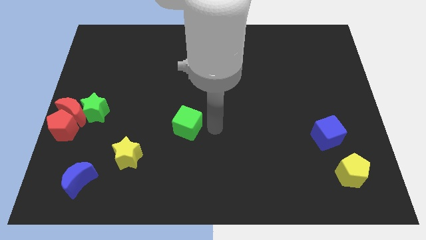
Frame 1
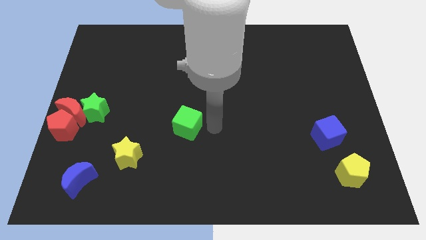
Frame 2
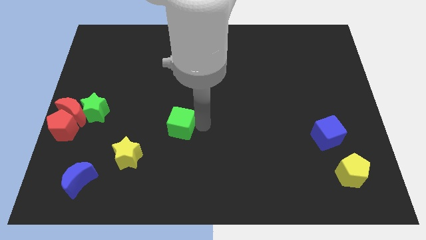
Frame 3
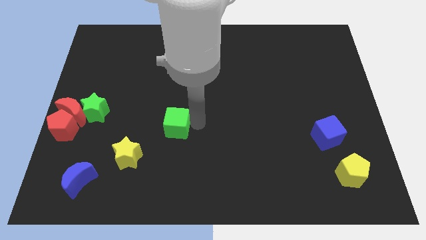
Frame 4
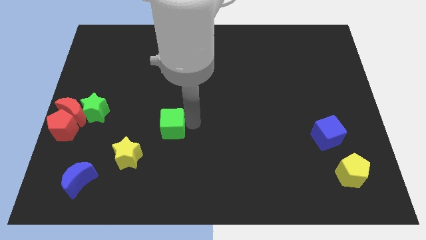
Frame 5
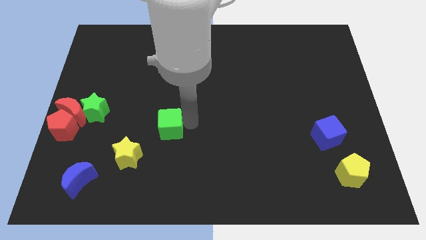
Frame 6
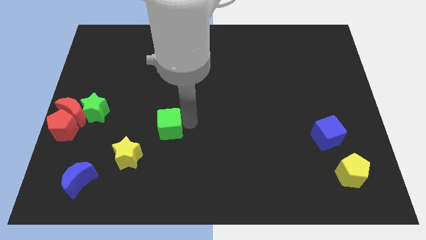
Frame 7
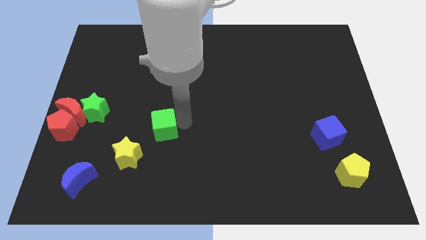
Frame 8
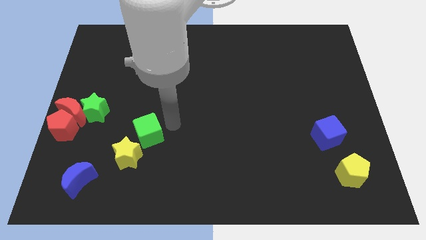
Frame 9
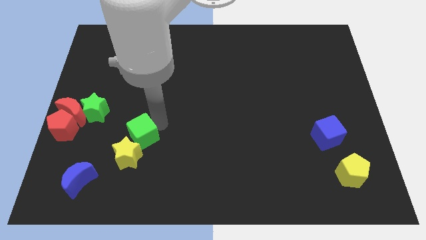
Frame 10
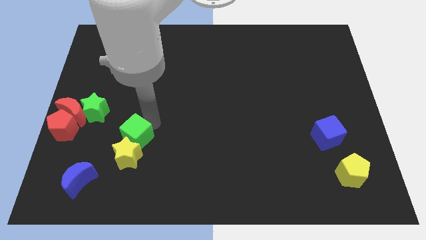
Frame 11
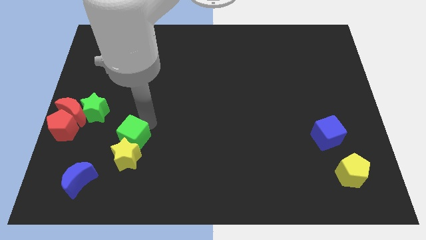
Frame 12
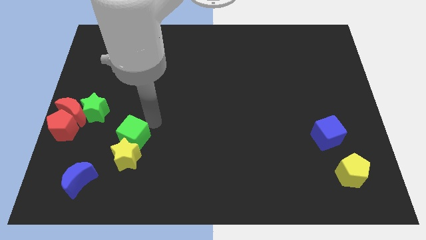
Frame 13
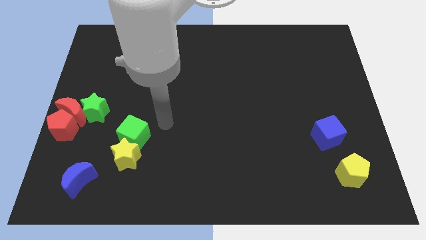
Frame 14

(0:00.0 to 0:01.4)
move green cube into yellow star

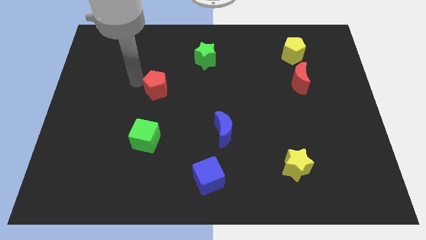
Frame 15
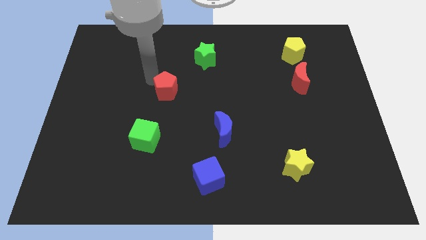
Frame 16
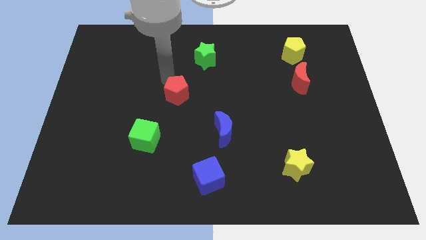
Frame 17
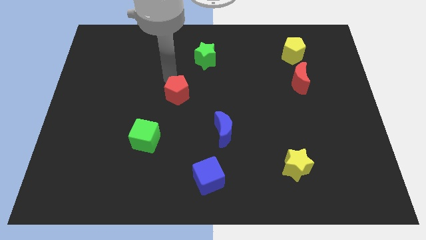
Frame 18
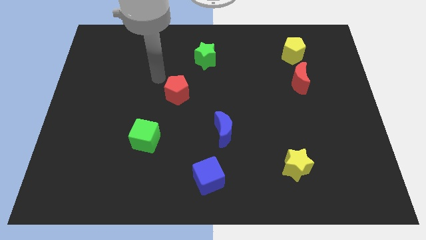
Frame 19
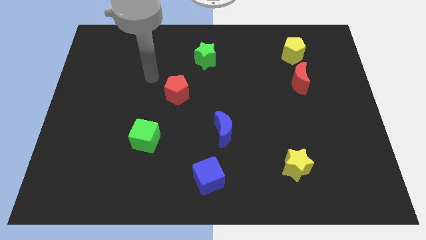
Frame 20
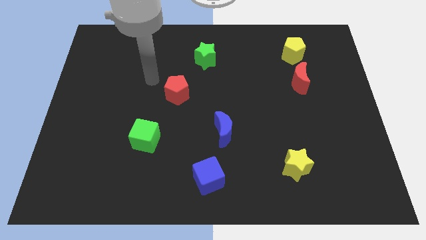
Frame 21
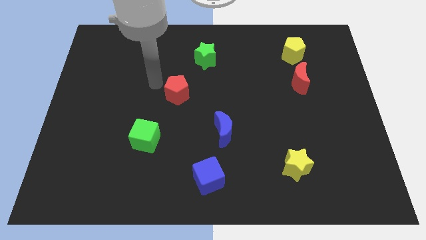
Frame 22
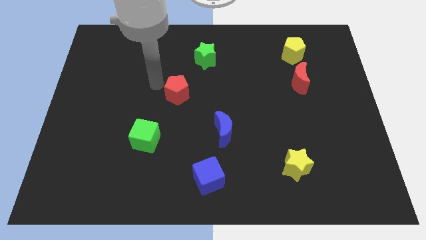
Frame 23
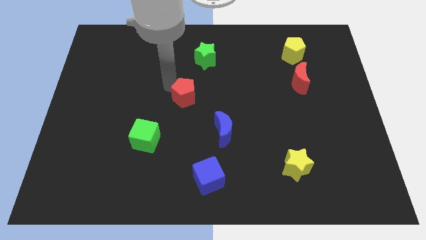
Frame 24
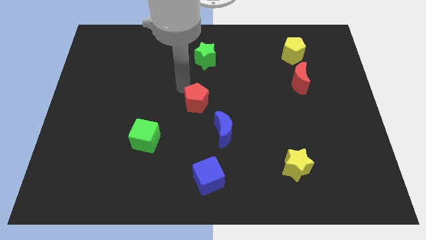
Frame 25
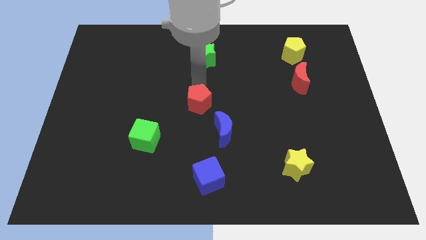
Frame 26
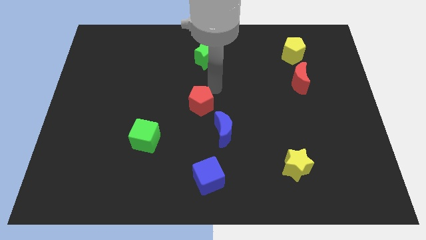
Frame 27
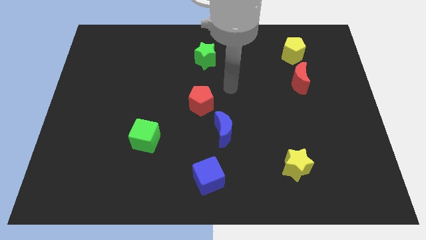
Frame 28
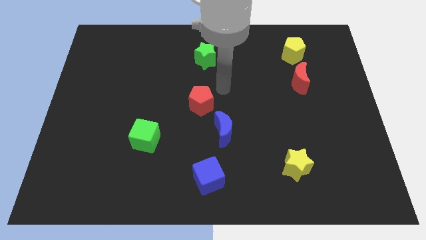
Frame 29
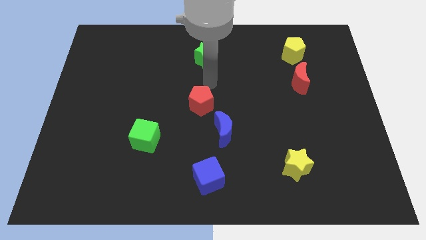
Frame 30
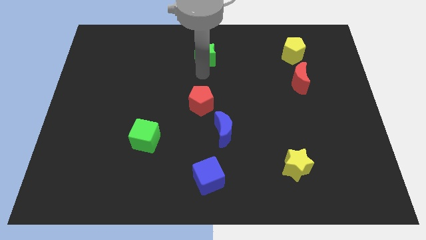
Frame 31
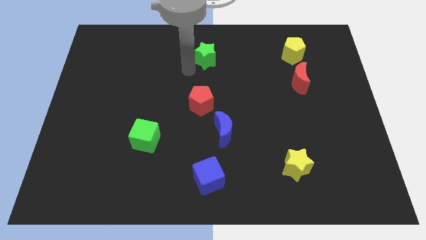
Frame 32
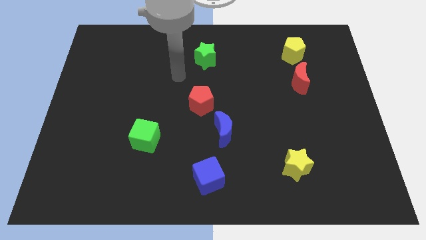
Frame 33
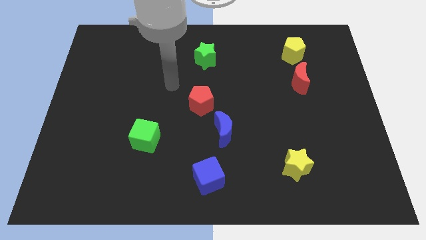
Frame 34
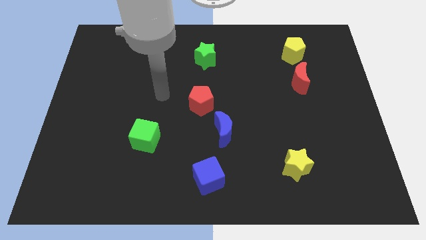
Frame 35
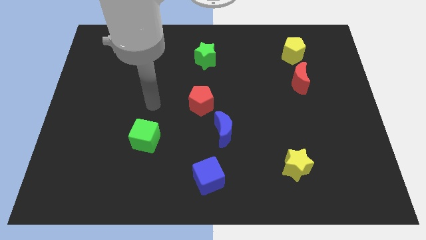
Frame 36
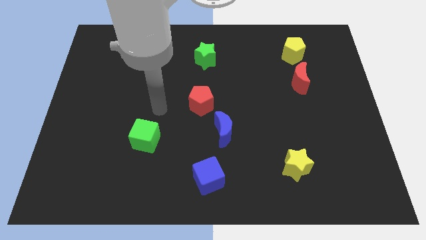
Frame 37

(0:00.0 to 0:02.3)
move the red pentagon to the bottom of green star

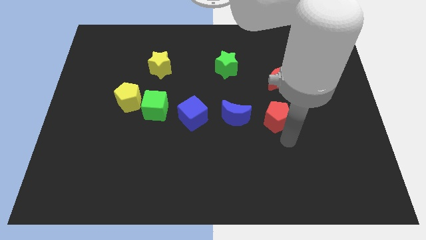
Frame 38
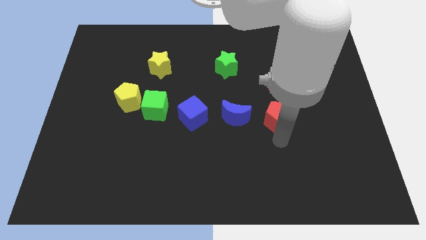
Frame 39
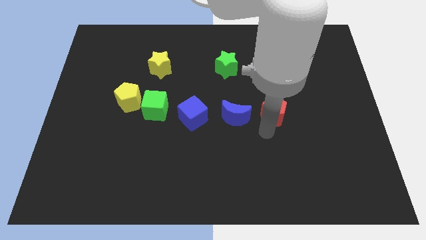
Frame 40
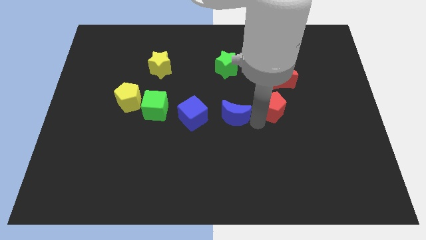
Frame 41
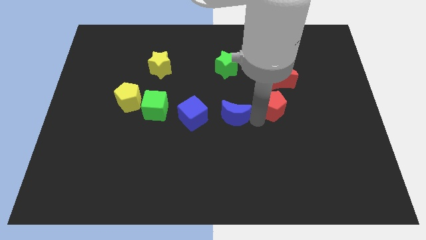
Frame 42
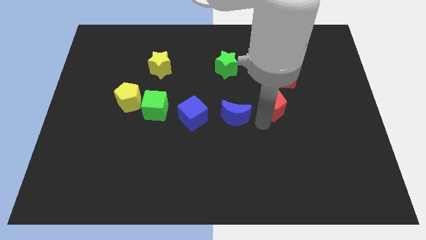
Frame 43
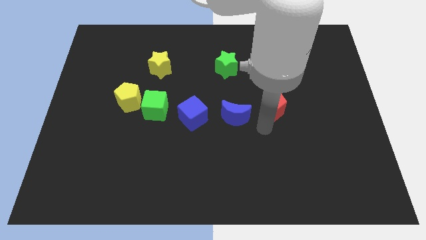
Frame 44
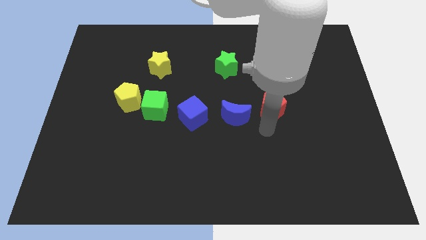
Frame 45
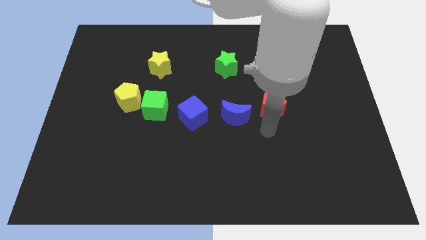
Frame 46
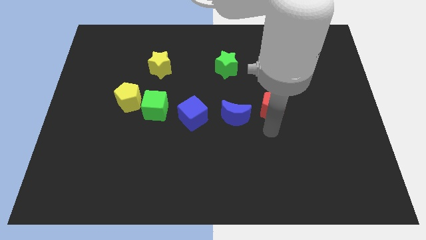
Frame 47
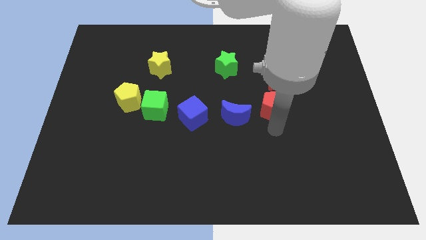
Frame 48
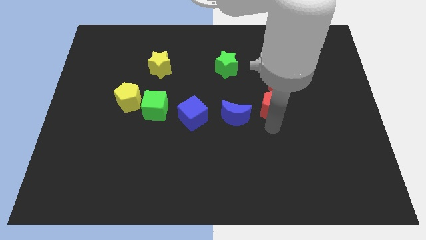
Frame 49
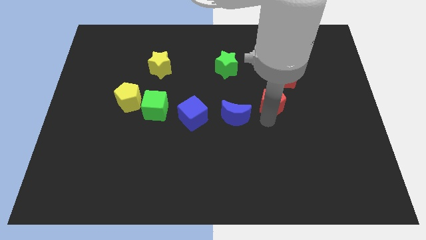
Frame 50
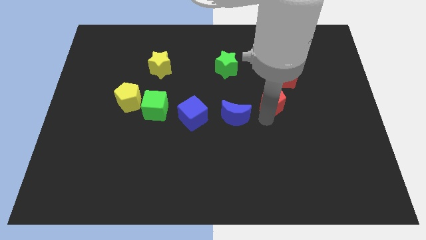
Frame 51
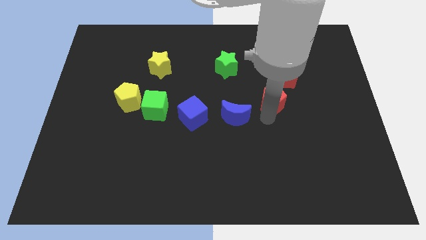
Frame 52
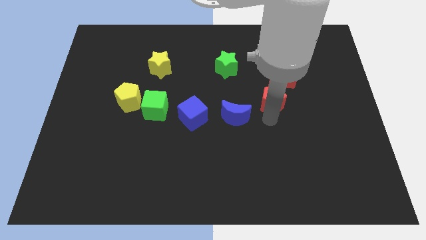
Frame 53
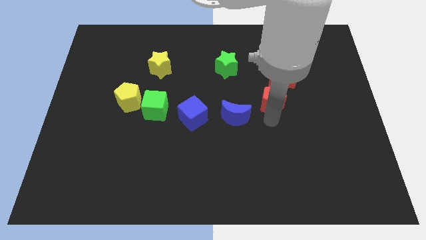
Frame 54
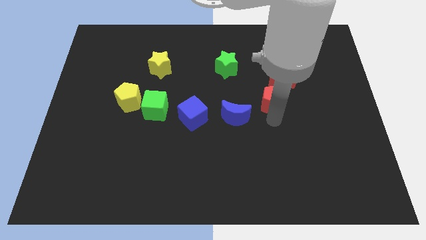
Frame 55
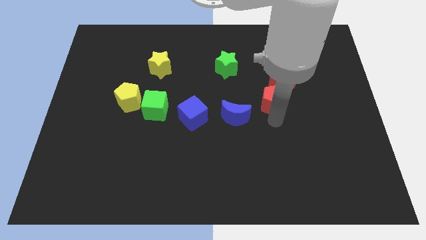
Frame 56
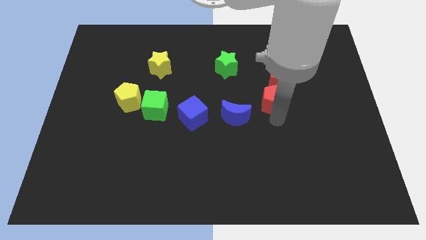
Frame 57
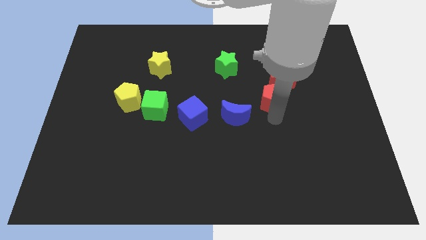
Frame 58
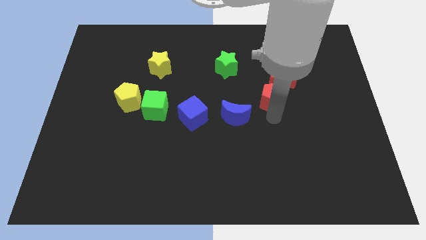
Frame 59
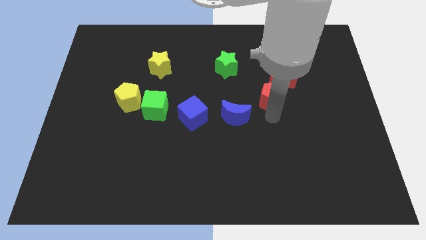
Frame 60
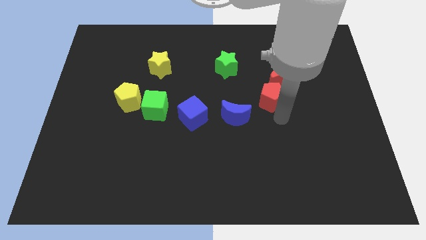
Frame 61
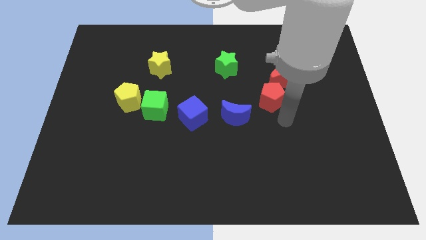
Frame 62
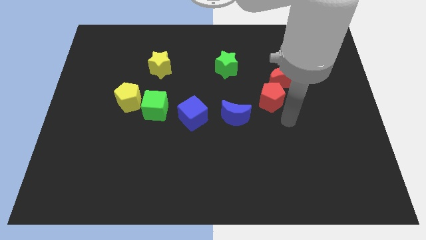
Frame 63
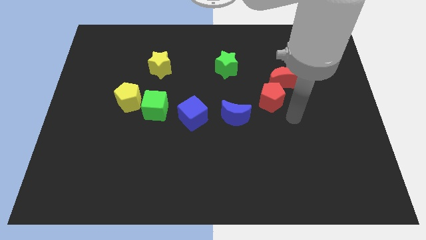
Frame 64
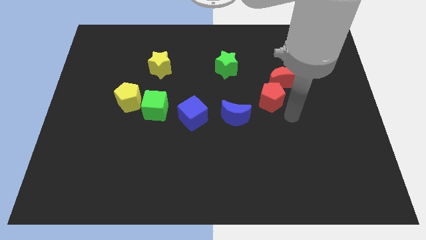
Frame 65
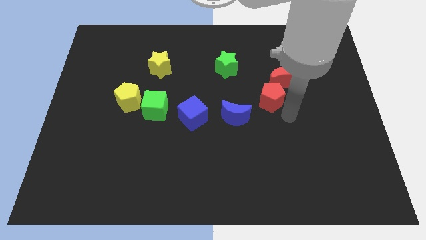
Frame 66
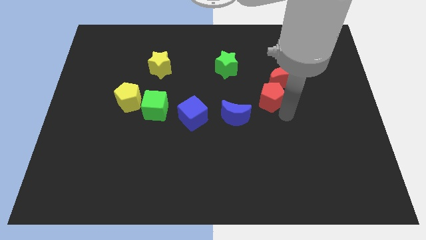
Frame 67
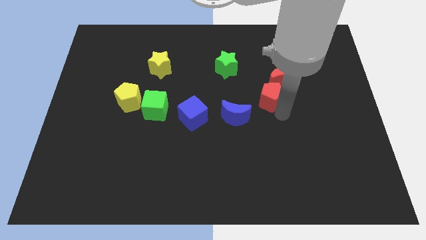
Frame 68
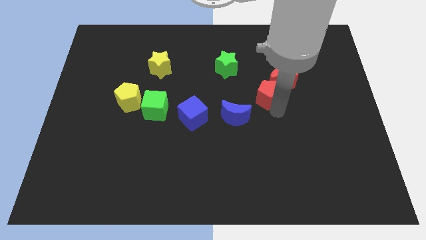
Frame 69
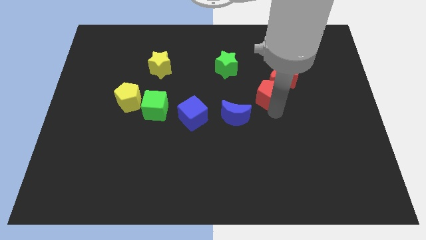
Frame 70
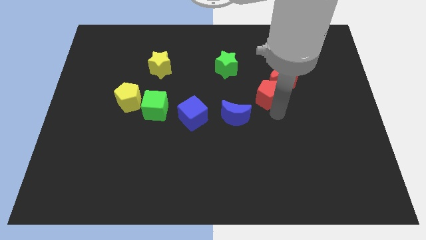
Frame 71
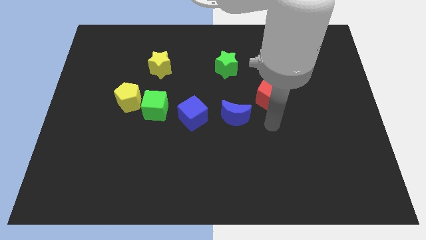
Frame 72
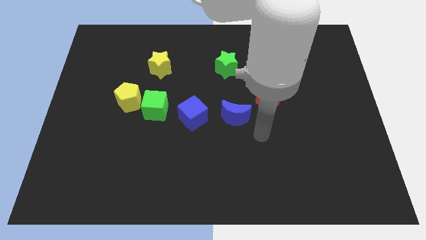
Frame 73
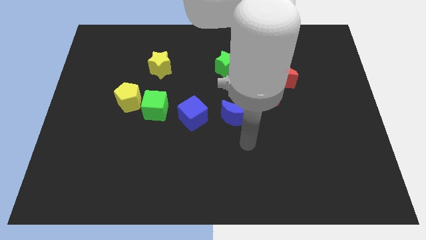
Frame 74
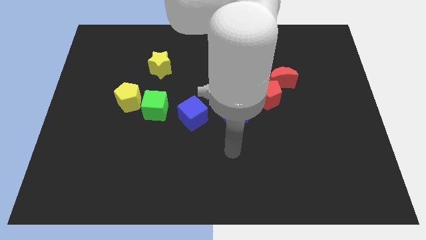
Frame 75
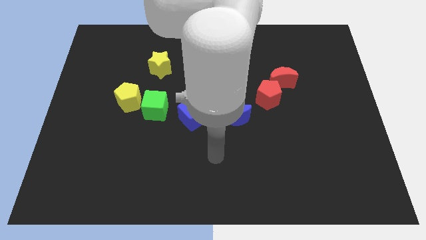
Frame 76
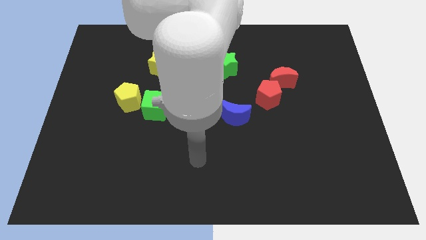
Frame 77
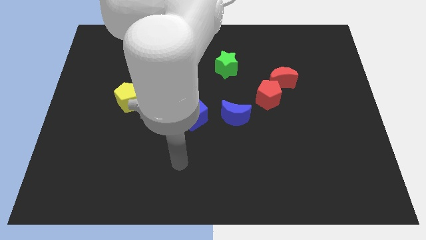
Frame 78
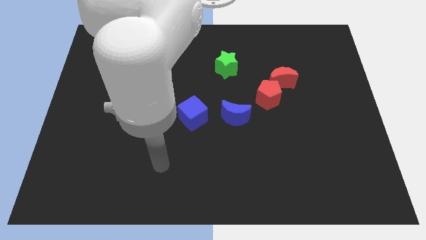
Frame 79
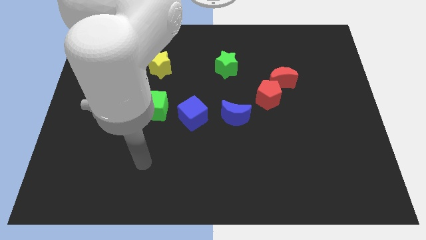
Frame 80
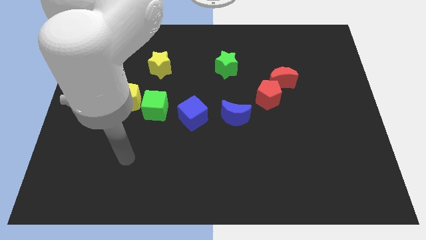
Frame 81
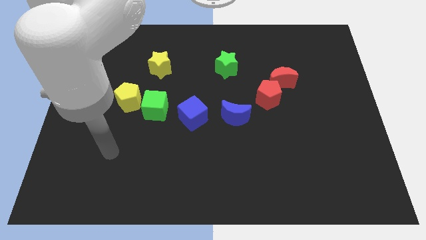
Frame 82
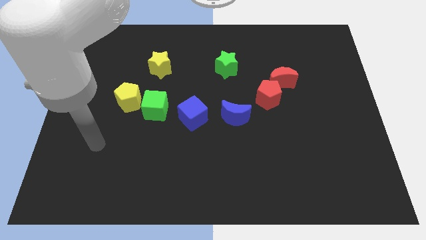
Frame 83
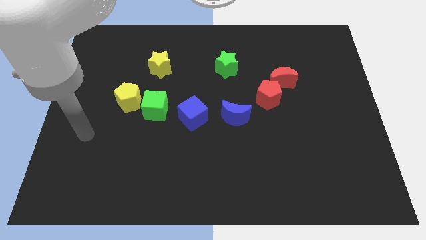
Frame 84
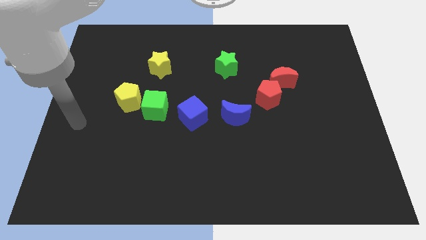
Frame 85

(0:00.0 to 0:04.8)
place the red pentagon to the bottom of red crescent

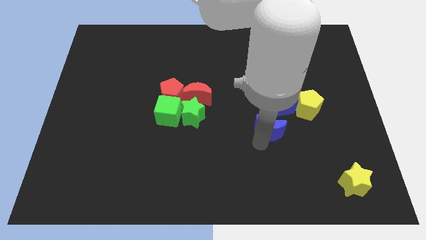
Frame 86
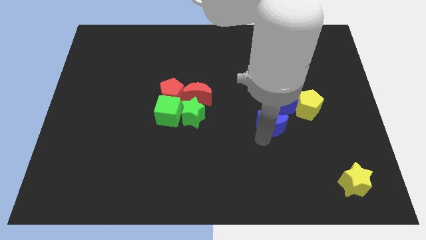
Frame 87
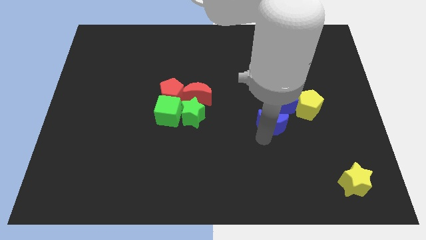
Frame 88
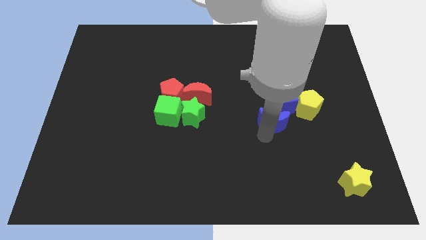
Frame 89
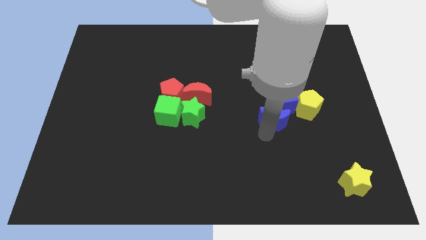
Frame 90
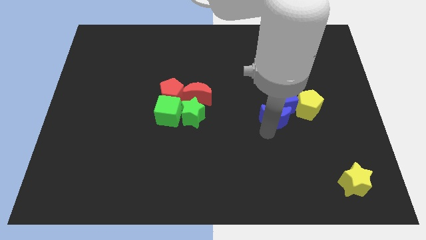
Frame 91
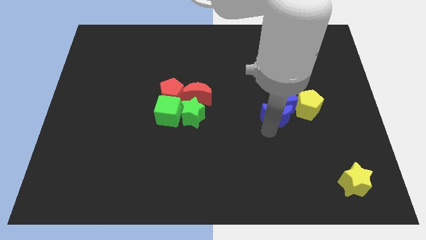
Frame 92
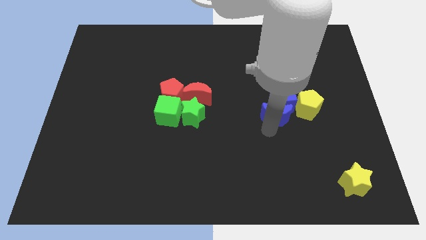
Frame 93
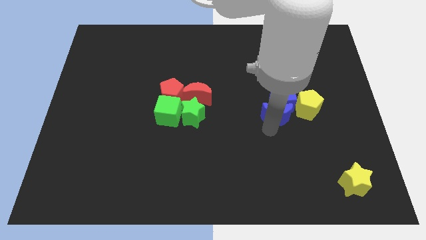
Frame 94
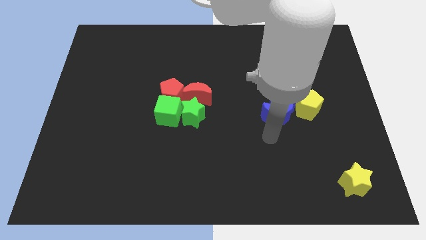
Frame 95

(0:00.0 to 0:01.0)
move blue crescent into blue cube
